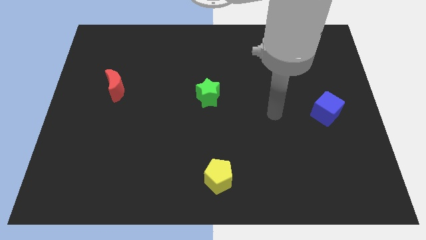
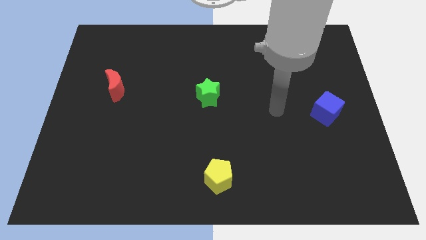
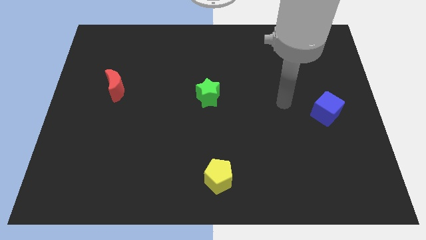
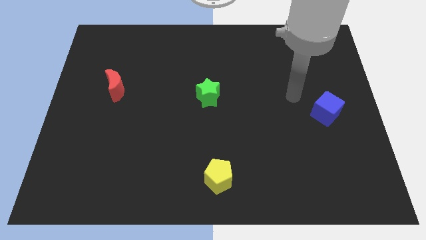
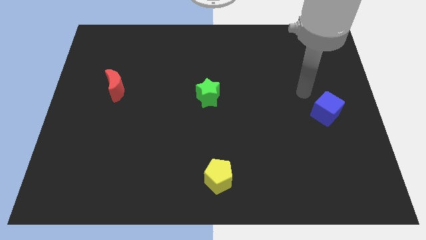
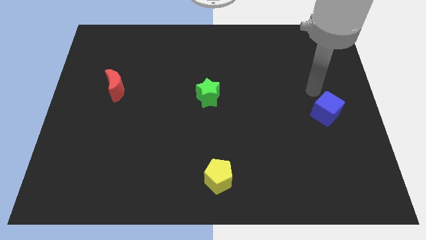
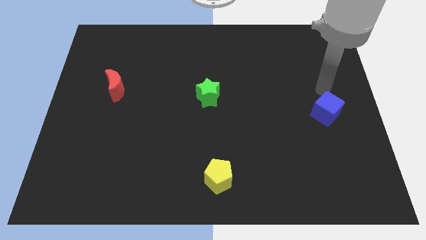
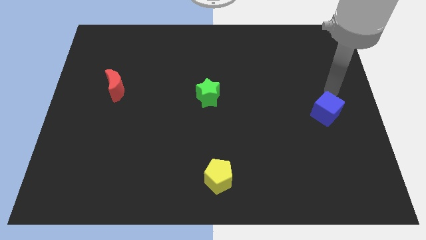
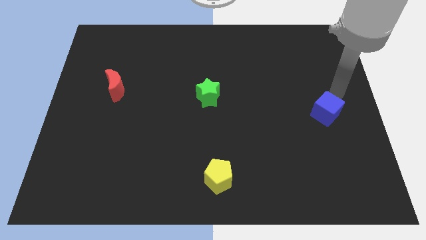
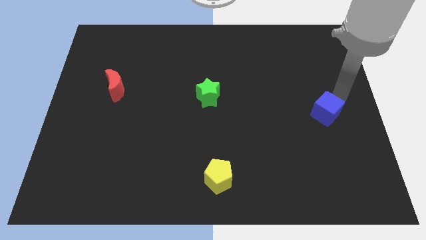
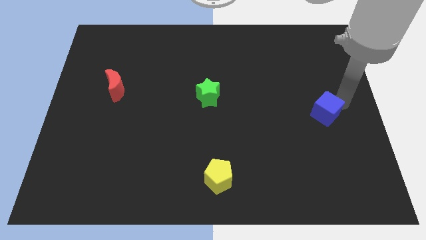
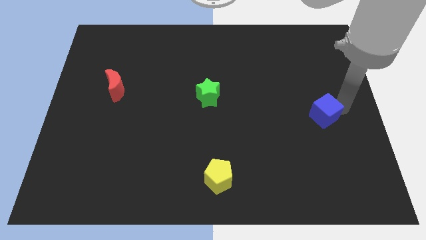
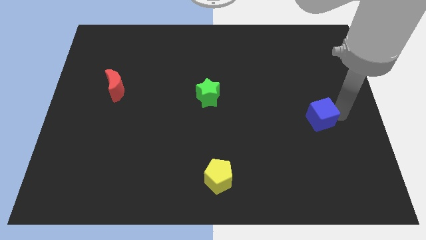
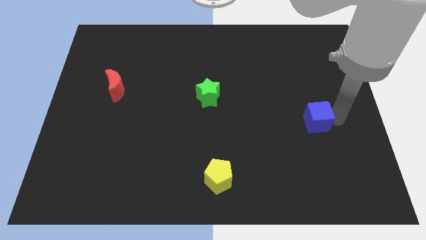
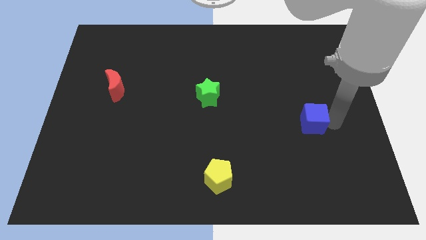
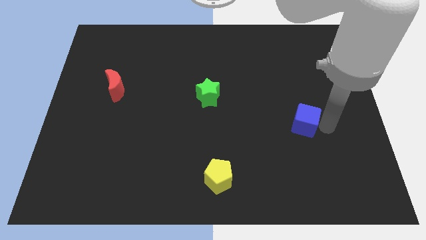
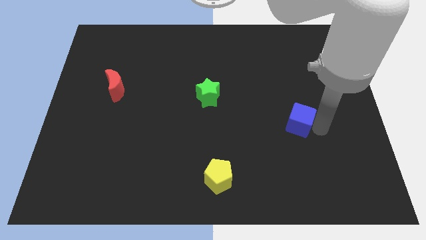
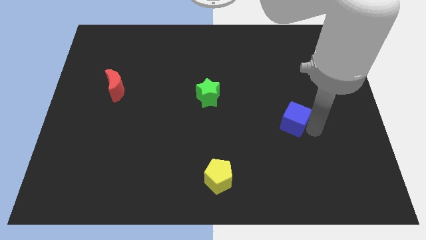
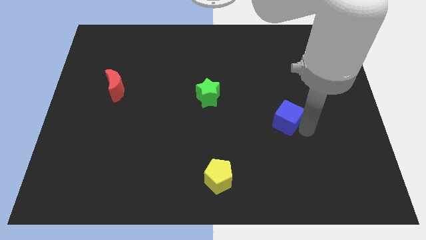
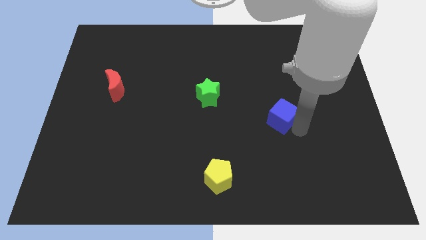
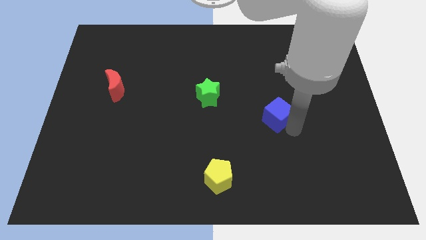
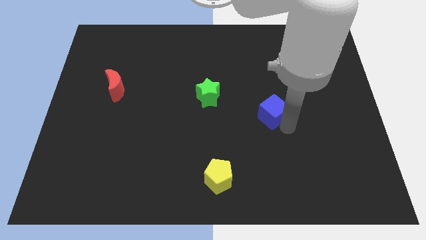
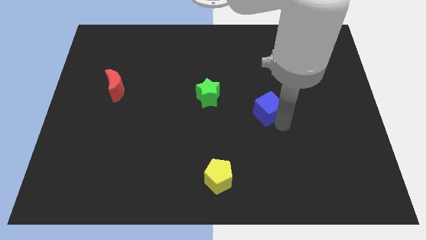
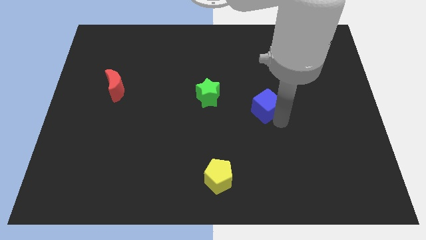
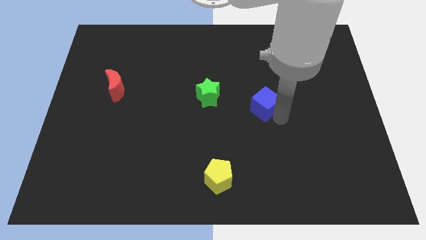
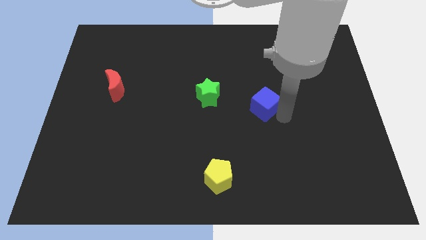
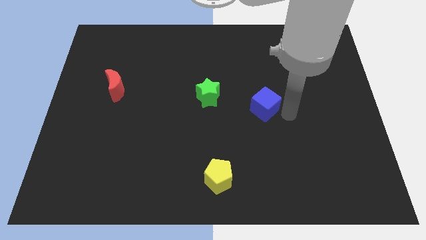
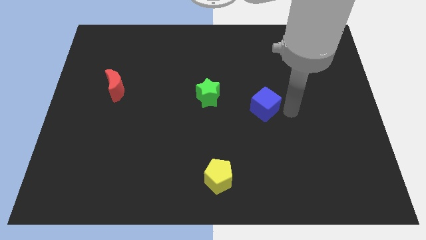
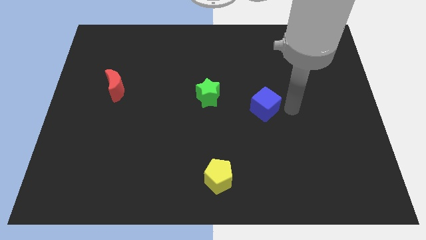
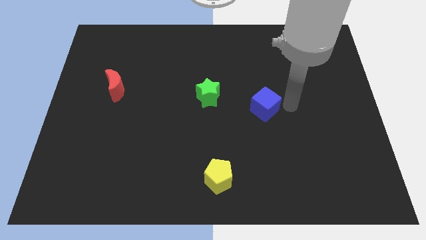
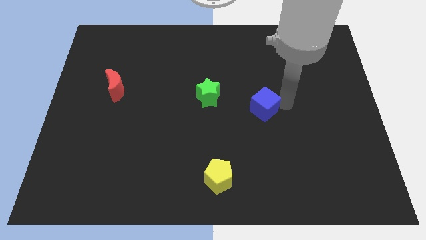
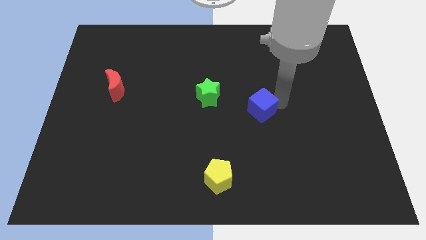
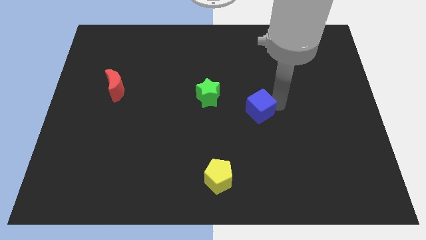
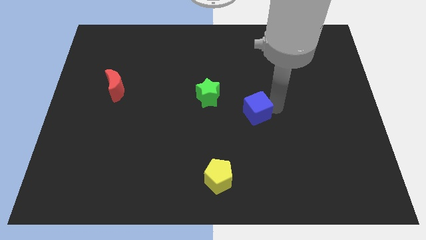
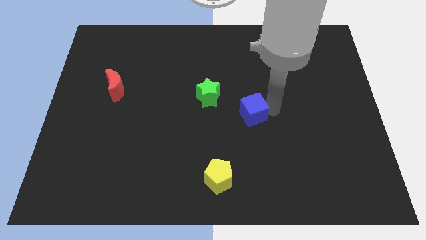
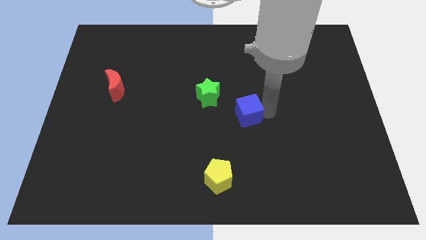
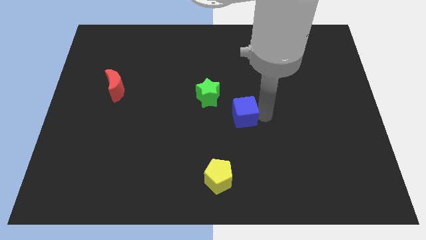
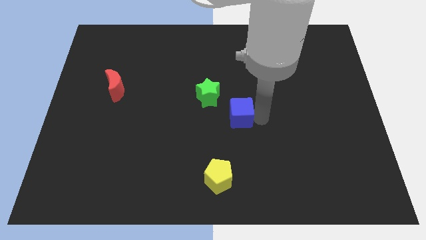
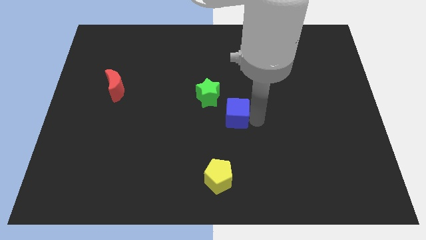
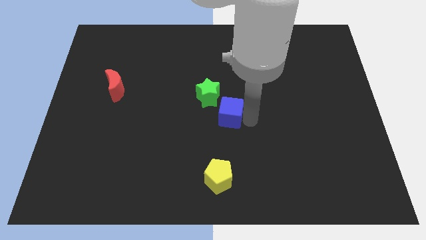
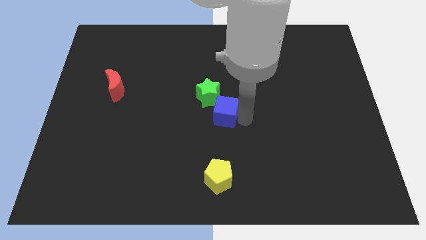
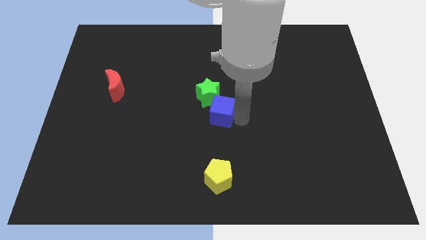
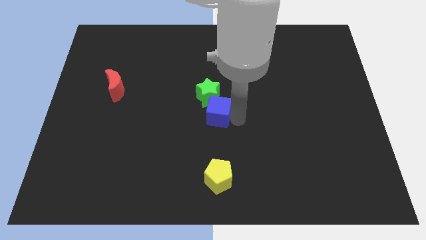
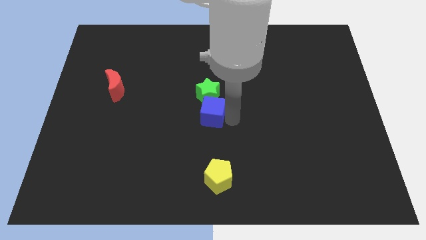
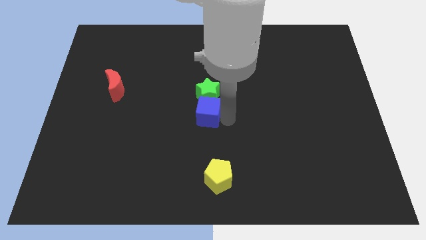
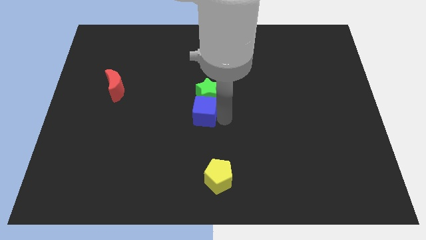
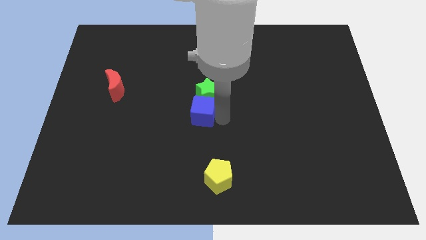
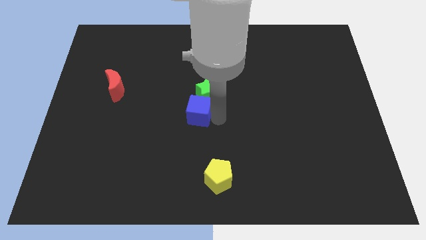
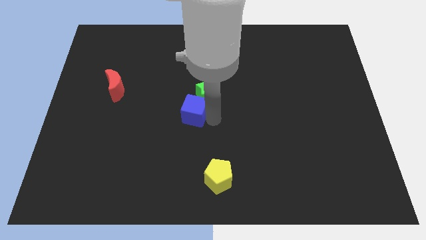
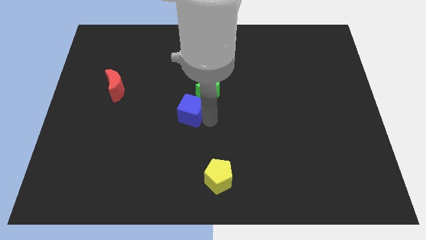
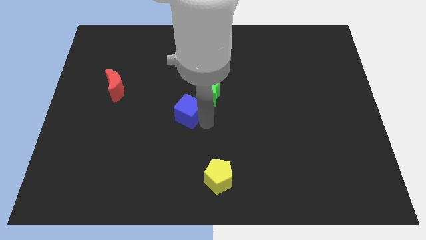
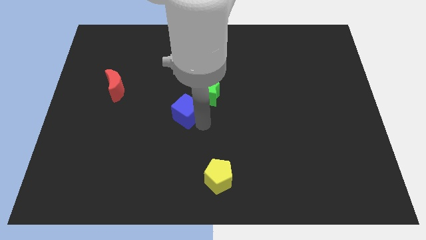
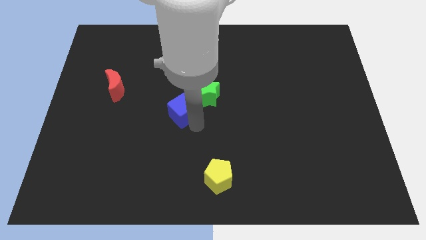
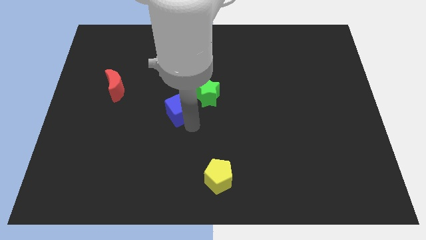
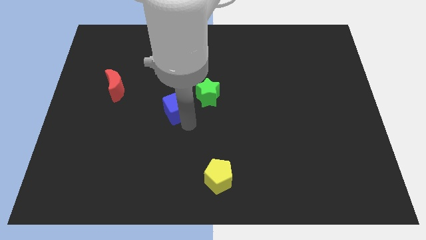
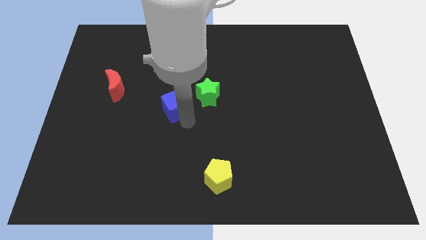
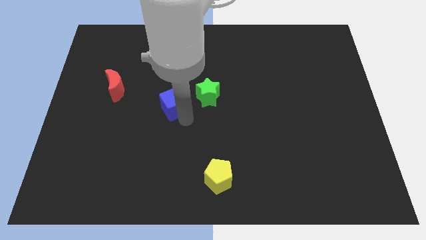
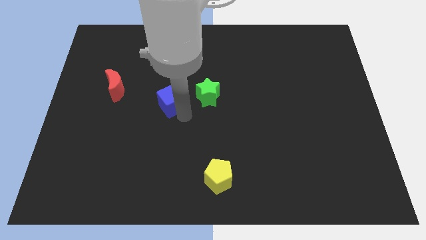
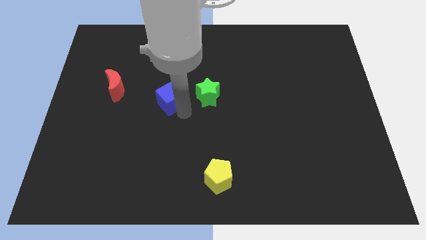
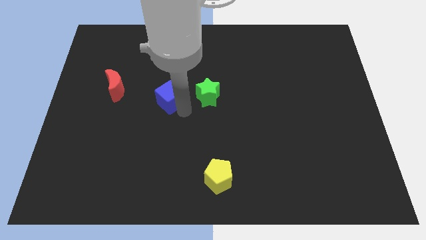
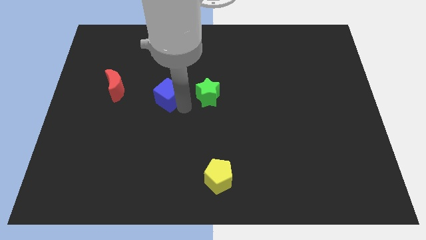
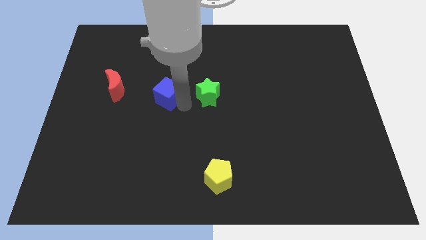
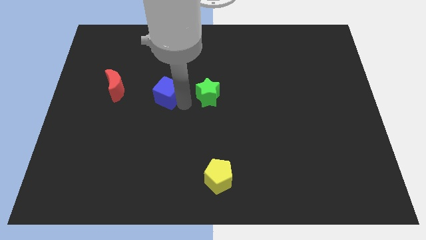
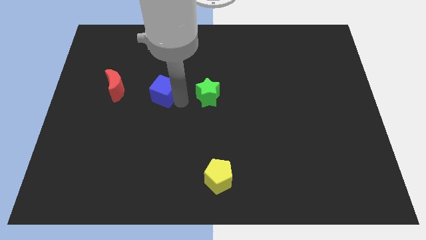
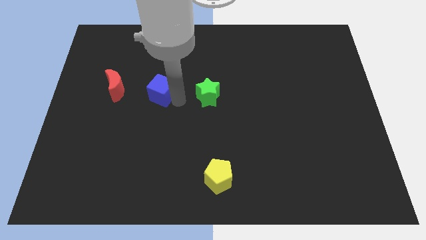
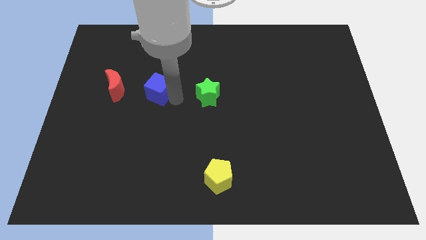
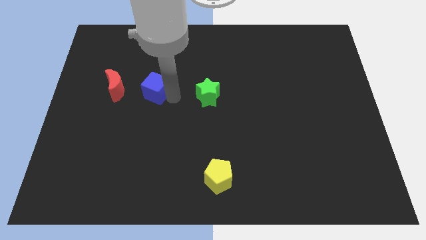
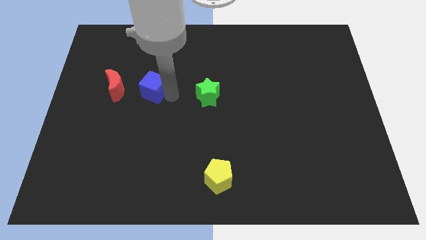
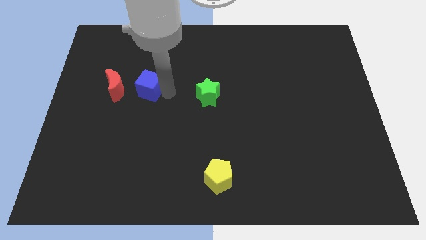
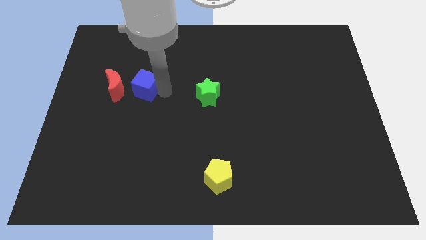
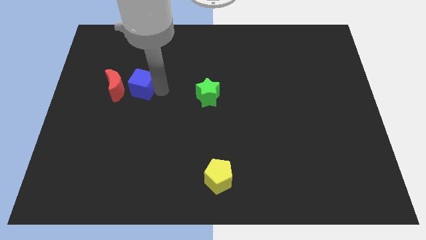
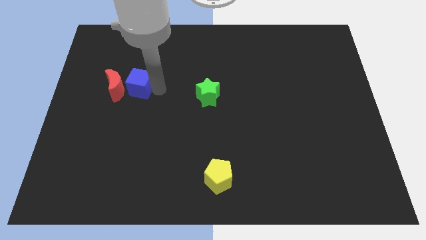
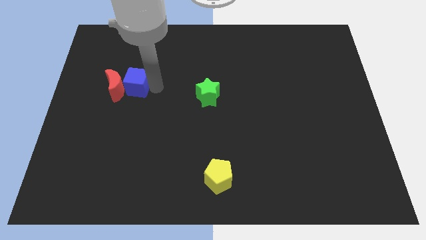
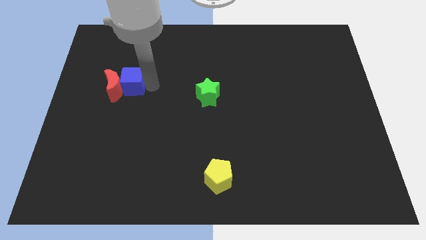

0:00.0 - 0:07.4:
put the cube next to the red moon

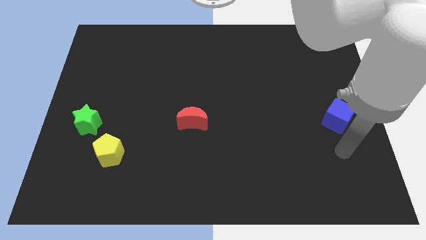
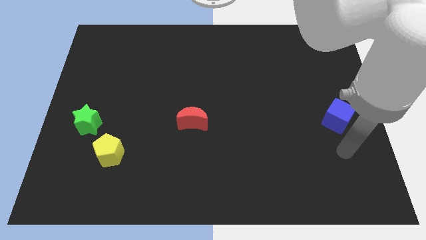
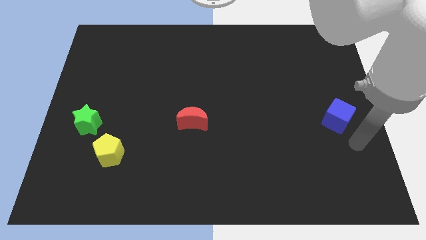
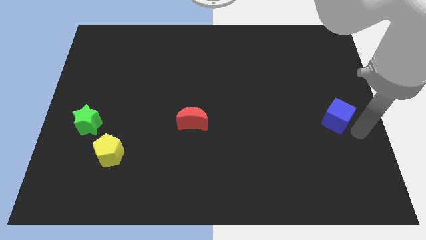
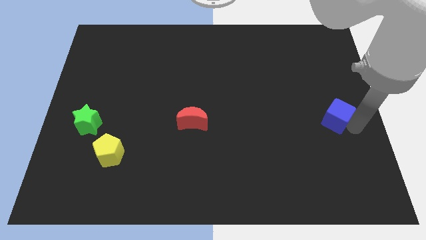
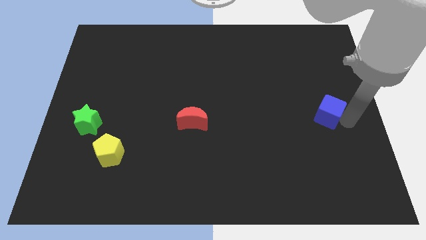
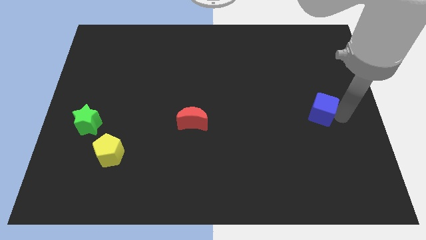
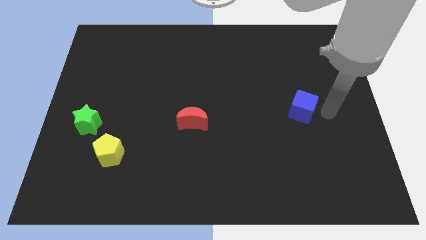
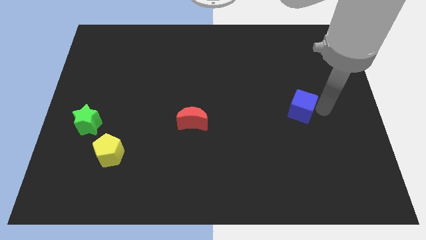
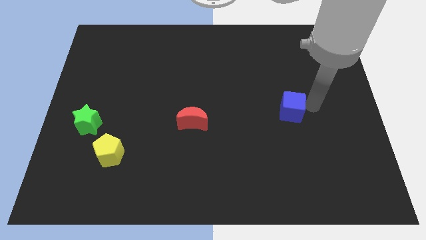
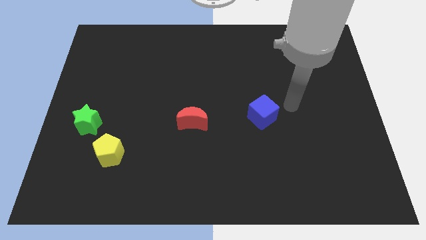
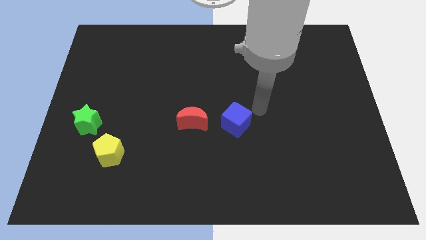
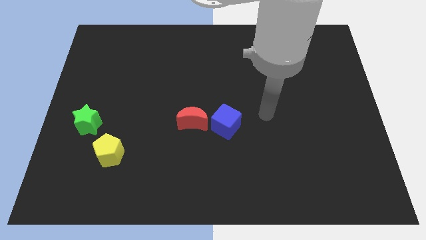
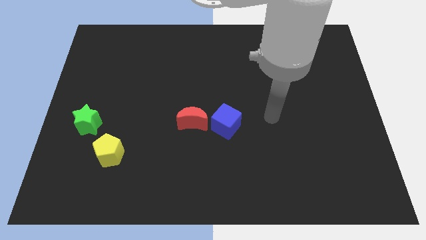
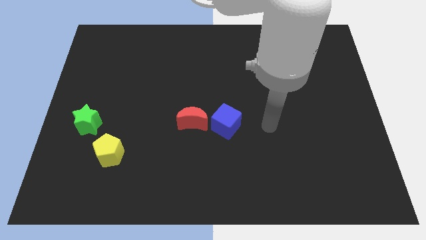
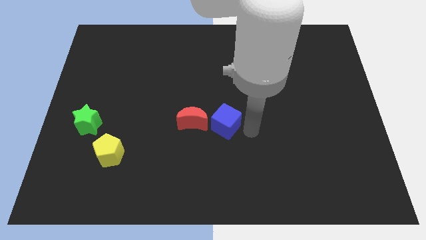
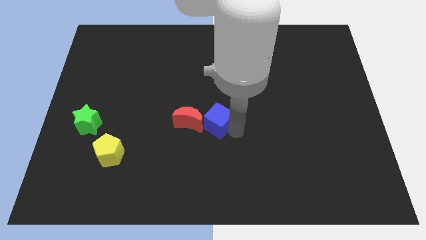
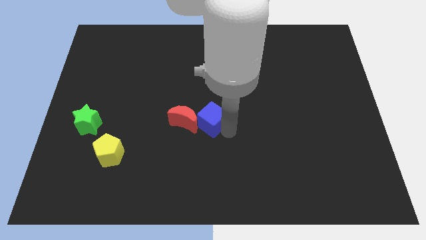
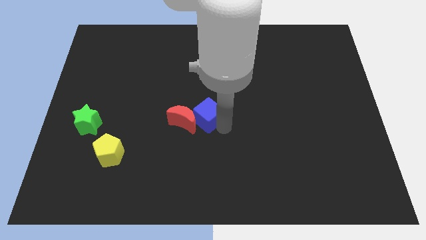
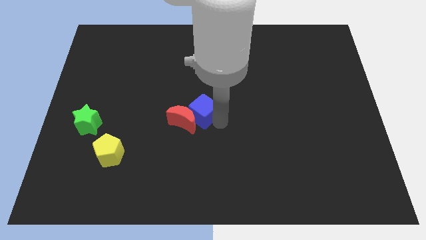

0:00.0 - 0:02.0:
move the cube to the red moon
